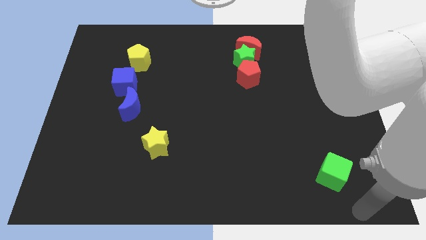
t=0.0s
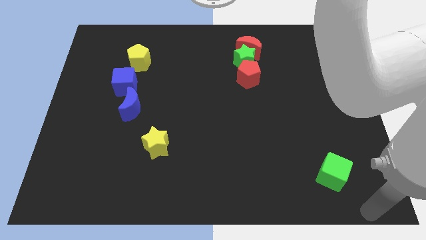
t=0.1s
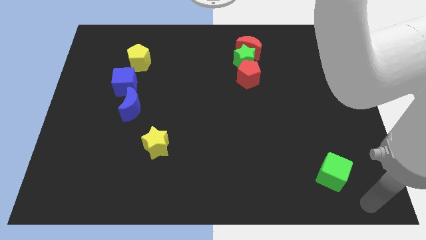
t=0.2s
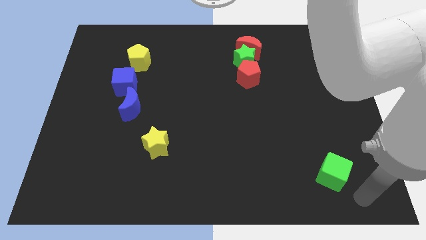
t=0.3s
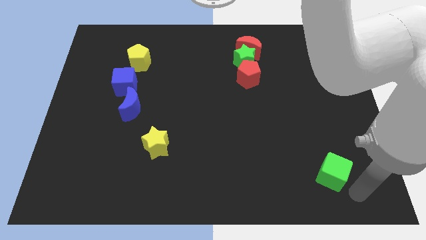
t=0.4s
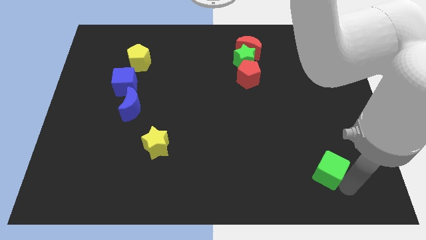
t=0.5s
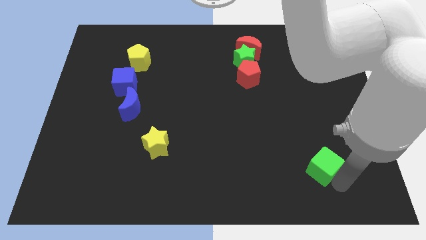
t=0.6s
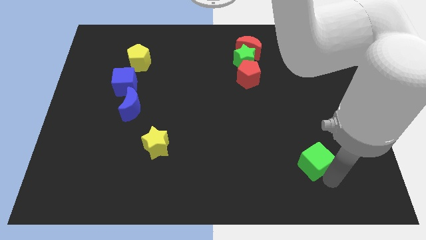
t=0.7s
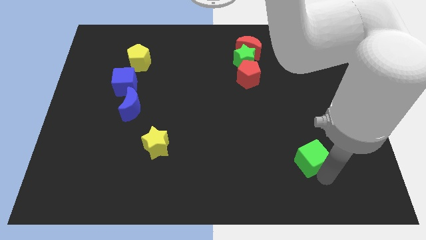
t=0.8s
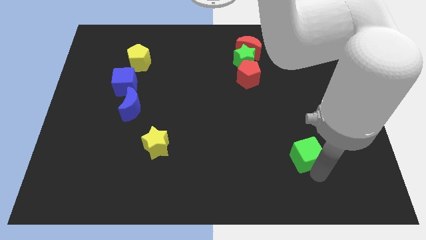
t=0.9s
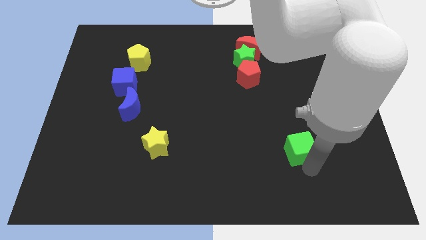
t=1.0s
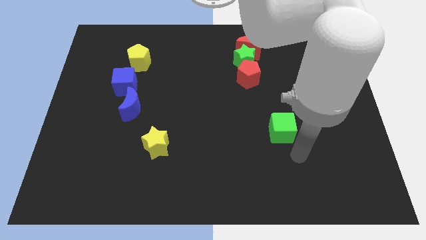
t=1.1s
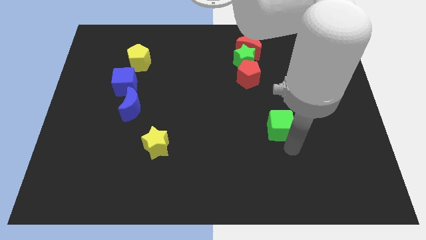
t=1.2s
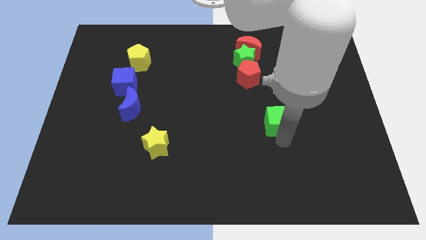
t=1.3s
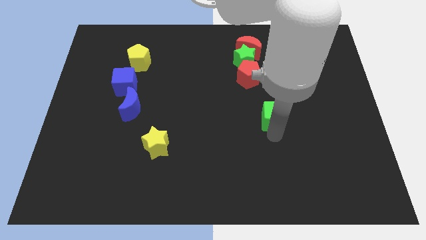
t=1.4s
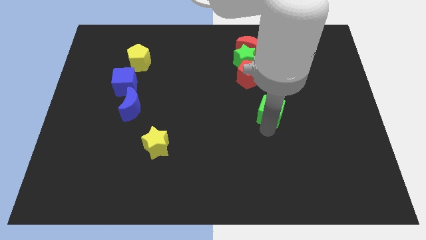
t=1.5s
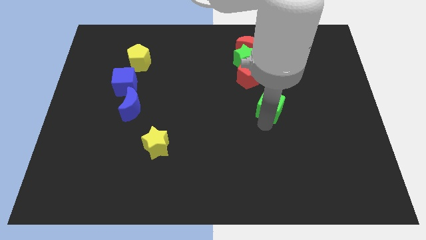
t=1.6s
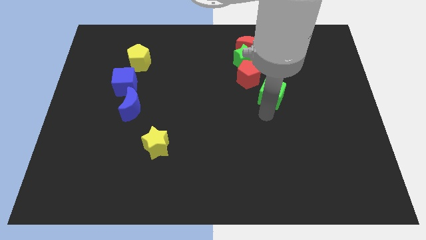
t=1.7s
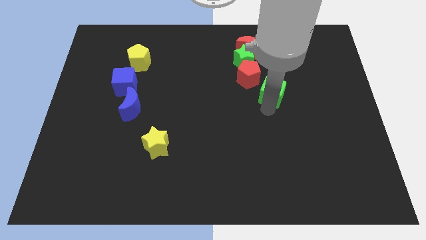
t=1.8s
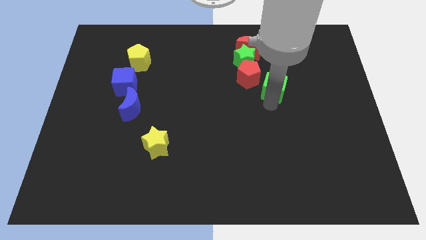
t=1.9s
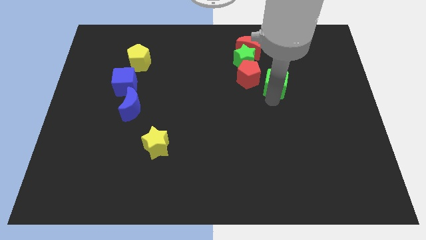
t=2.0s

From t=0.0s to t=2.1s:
push green cube towards red pentagon

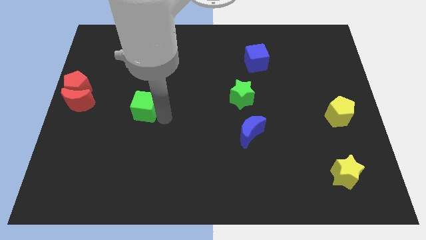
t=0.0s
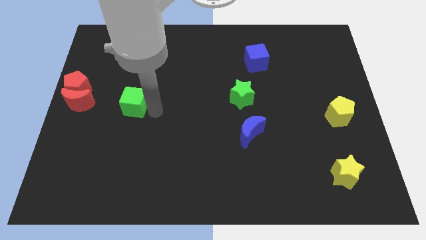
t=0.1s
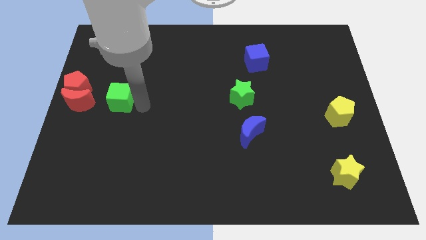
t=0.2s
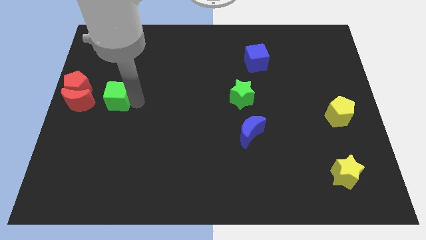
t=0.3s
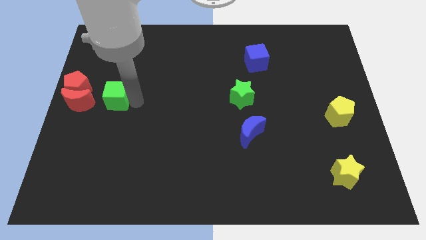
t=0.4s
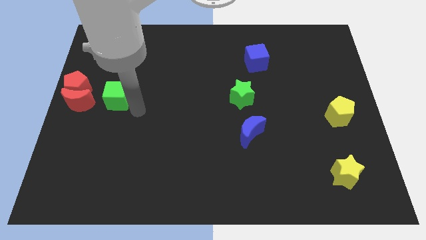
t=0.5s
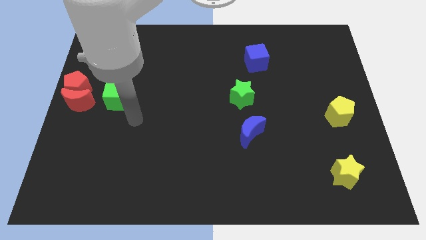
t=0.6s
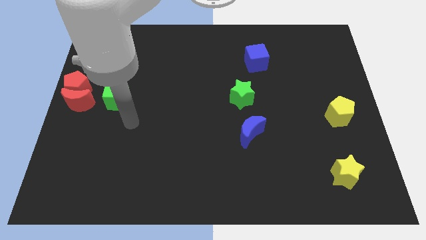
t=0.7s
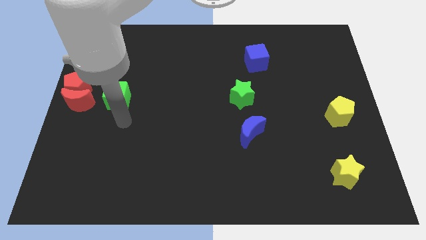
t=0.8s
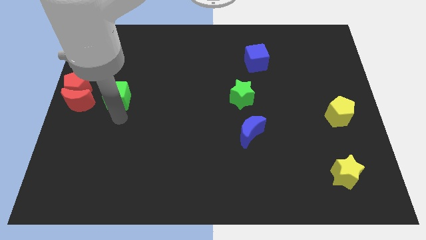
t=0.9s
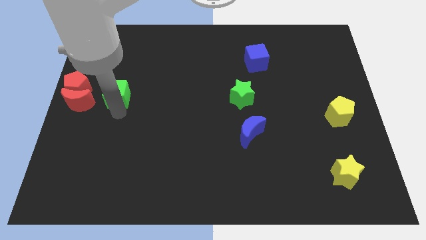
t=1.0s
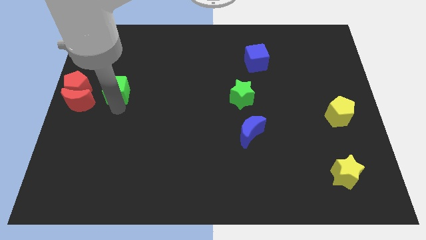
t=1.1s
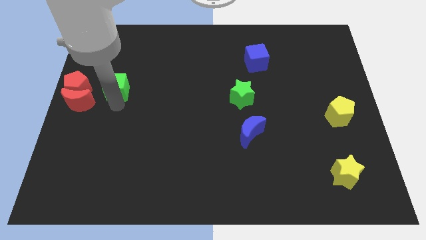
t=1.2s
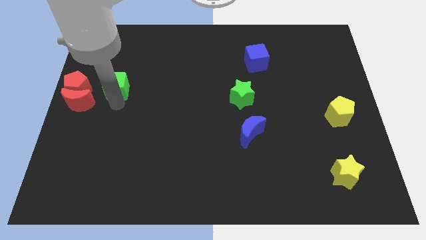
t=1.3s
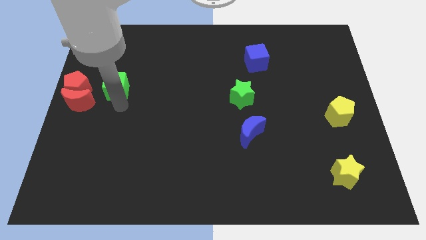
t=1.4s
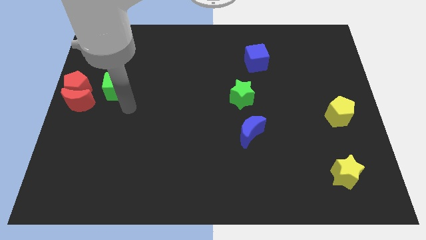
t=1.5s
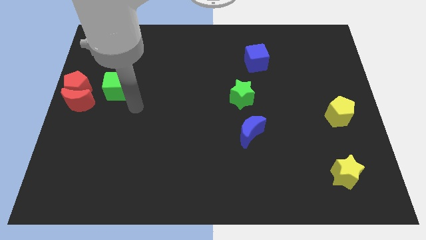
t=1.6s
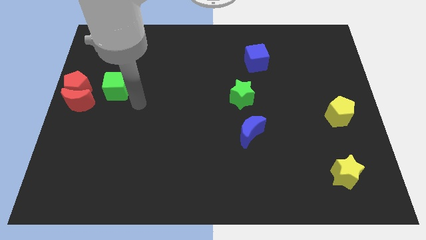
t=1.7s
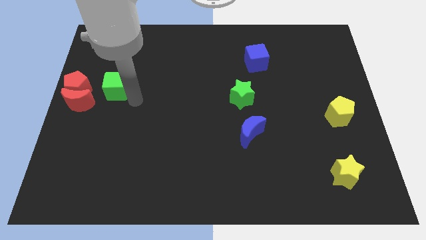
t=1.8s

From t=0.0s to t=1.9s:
put the green cube right to red pentagon

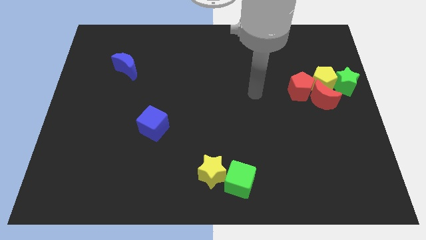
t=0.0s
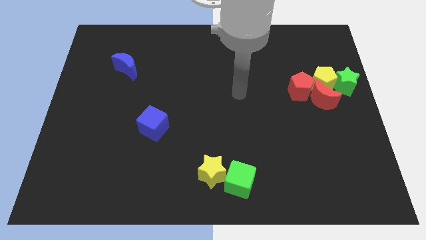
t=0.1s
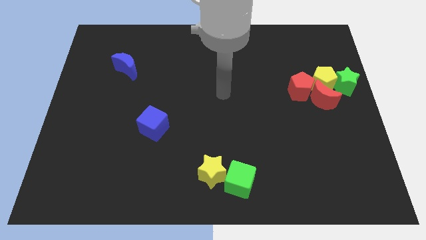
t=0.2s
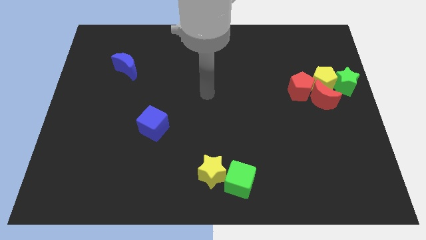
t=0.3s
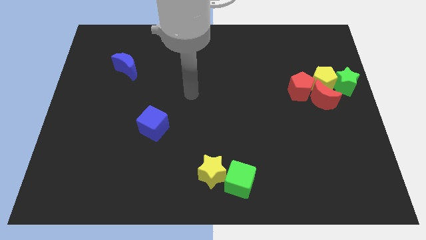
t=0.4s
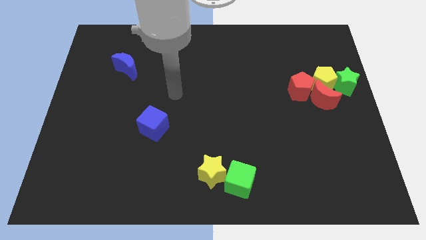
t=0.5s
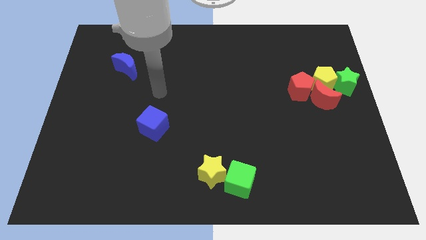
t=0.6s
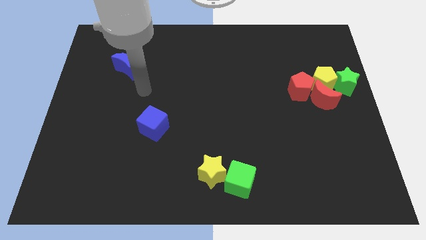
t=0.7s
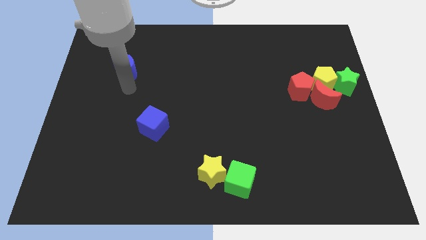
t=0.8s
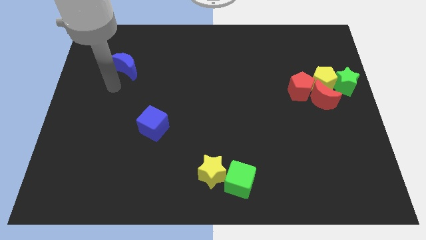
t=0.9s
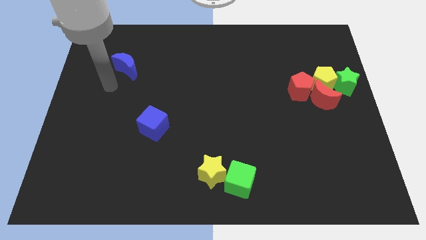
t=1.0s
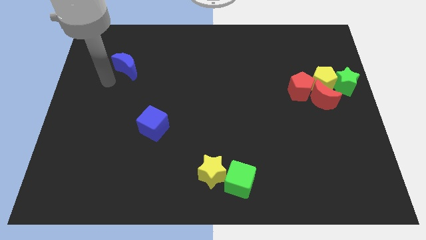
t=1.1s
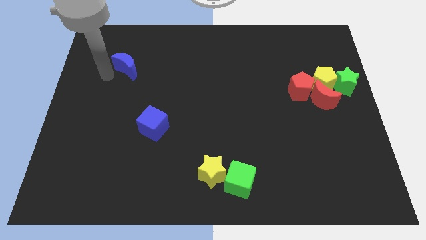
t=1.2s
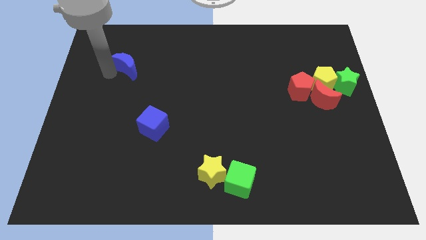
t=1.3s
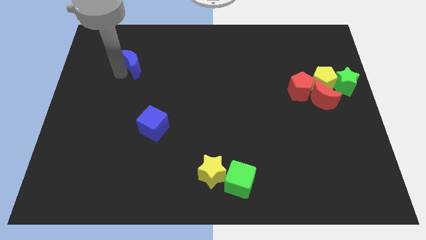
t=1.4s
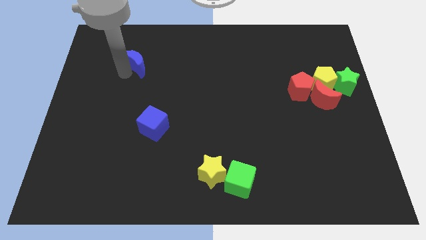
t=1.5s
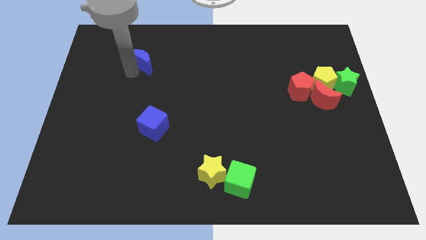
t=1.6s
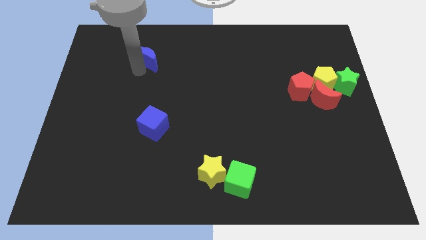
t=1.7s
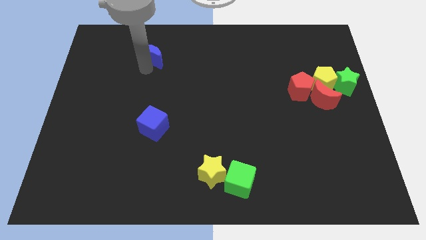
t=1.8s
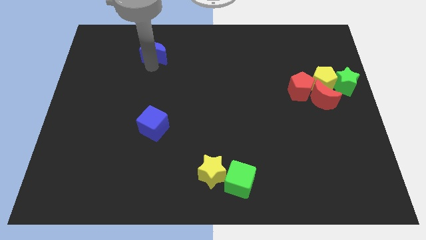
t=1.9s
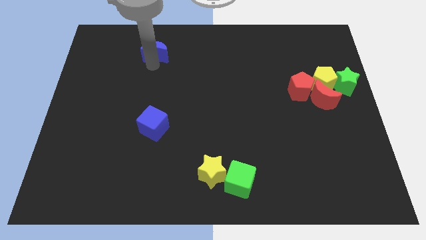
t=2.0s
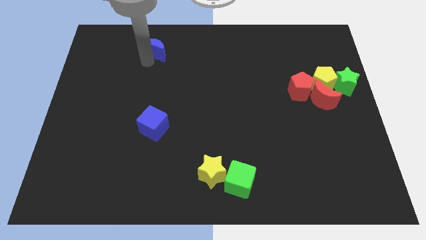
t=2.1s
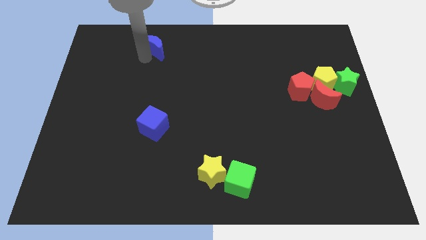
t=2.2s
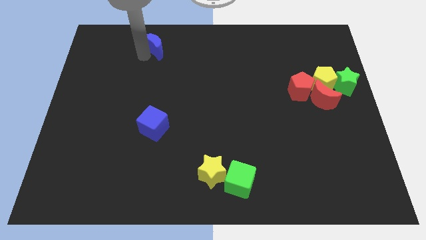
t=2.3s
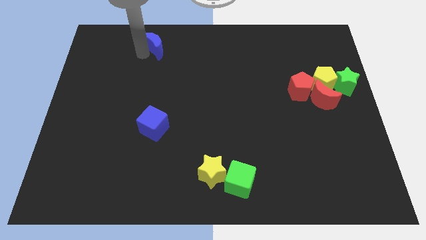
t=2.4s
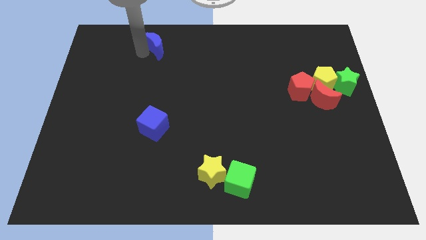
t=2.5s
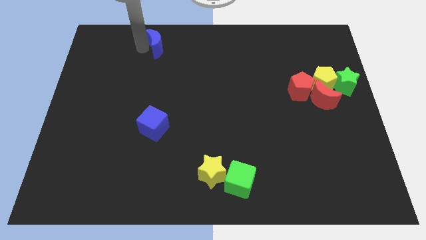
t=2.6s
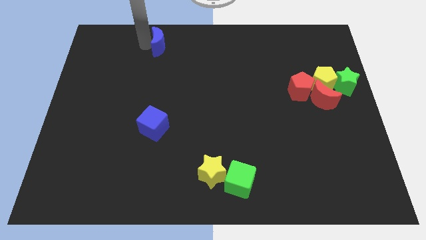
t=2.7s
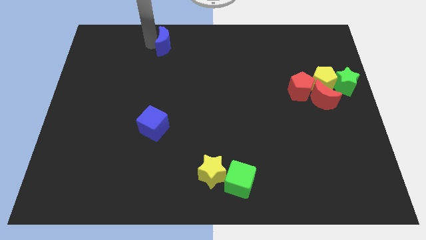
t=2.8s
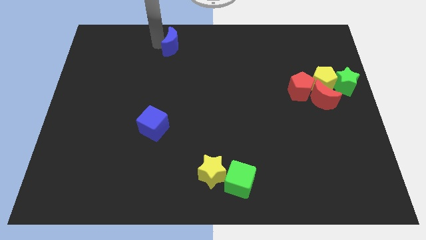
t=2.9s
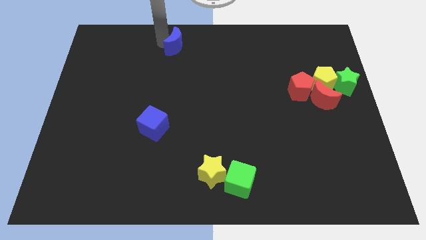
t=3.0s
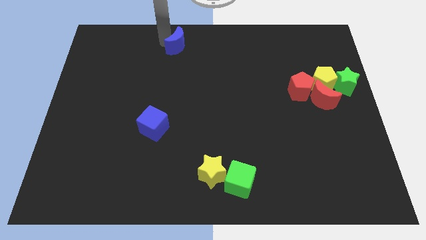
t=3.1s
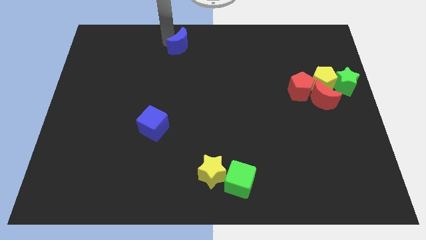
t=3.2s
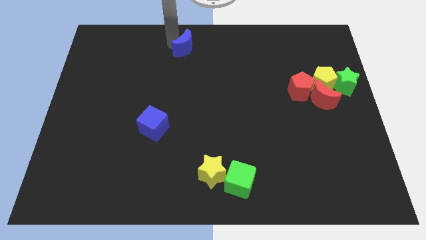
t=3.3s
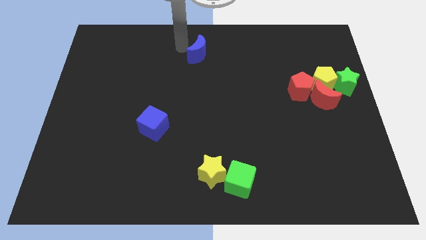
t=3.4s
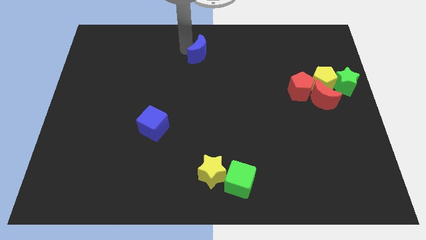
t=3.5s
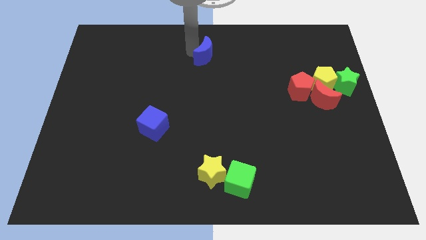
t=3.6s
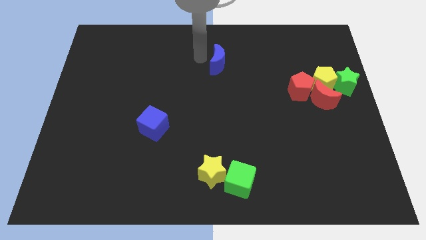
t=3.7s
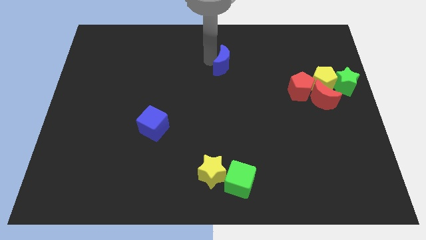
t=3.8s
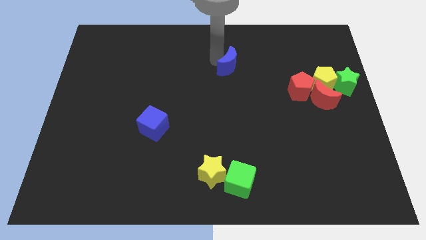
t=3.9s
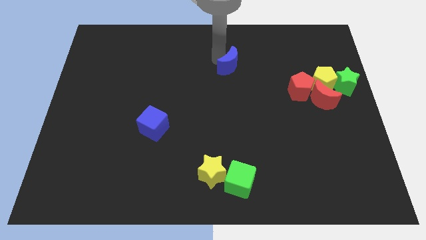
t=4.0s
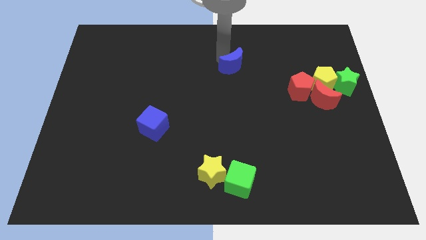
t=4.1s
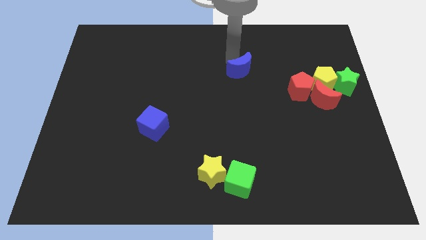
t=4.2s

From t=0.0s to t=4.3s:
move the blue crescent diagonal to the blue cube

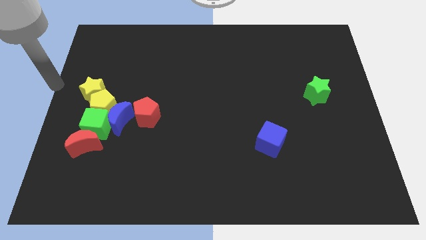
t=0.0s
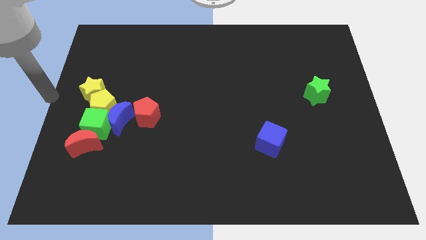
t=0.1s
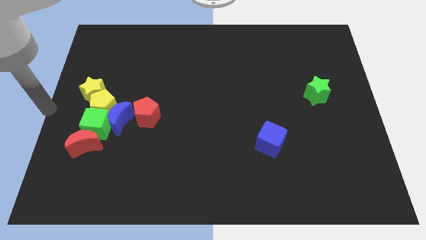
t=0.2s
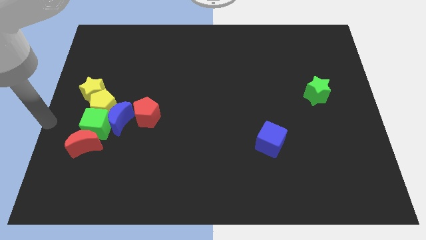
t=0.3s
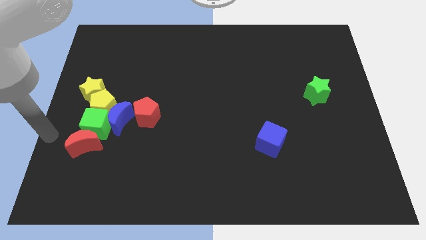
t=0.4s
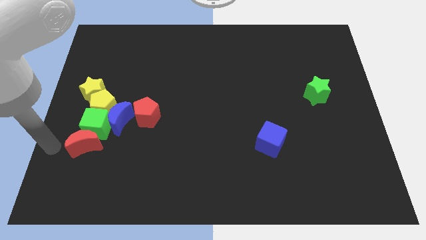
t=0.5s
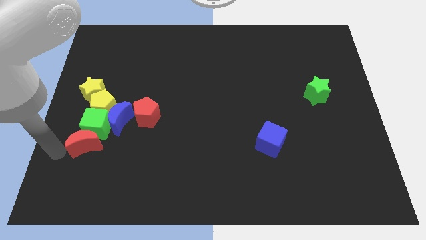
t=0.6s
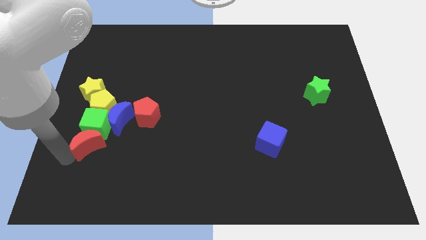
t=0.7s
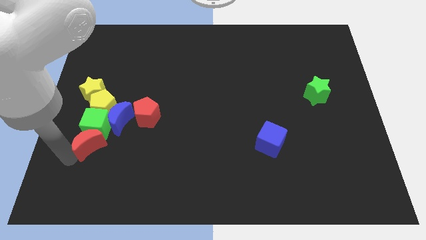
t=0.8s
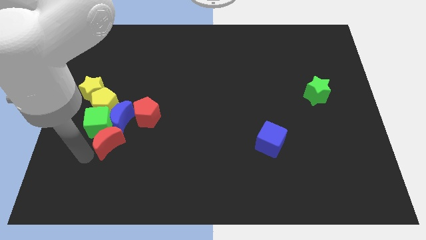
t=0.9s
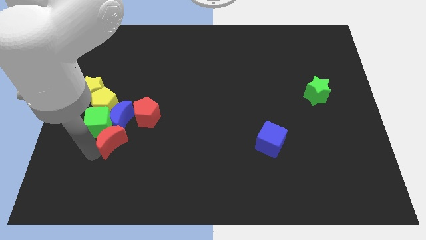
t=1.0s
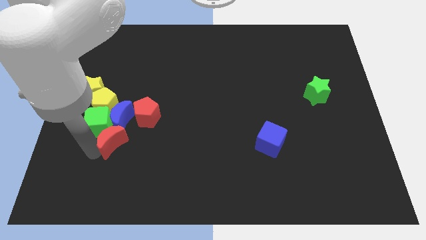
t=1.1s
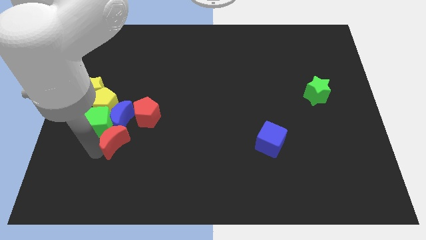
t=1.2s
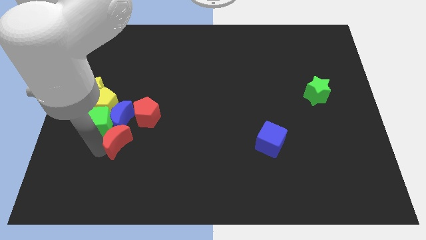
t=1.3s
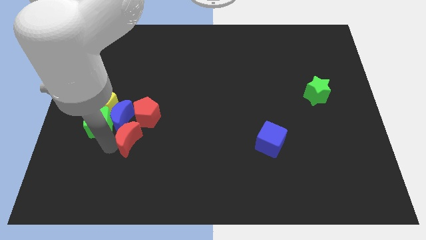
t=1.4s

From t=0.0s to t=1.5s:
push red crescent below blue crescent
